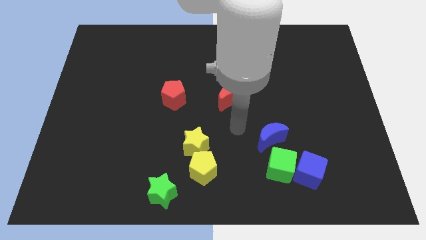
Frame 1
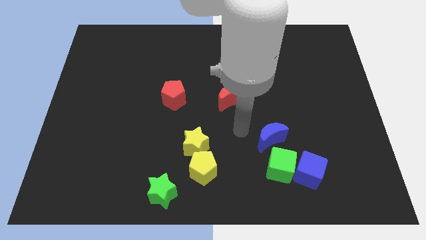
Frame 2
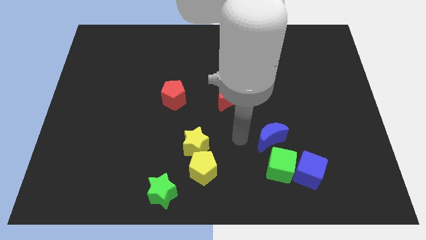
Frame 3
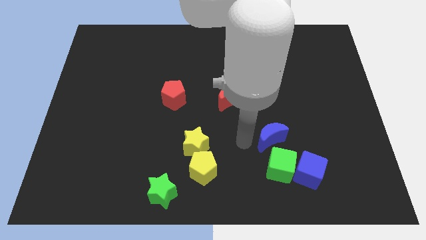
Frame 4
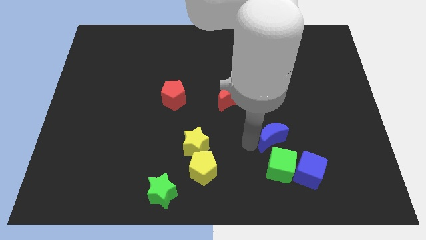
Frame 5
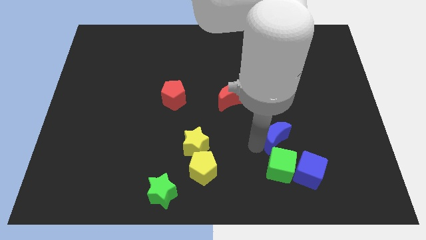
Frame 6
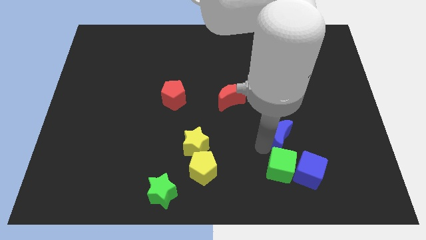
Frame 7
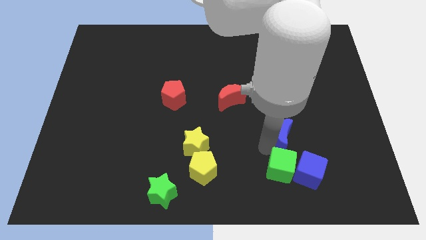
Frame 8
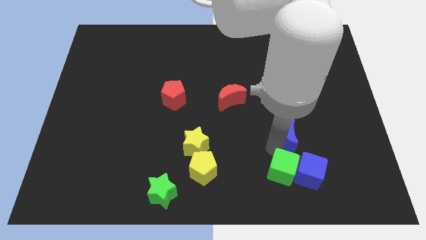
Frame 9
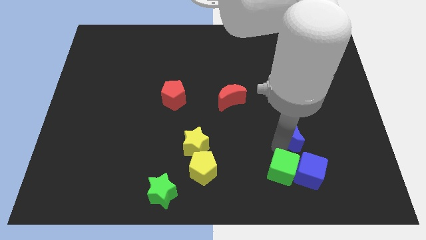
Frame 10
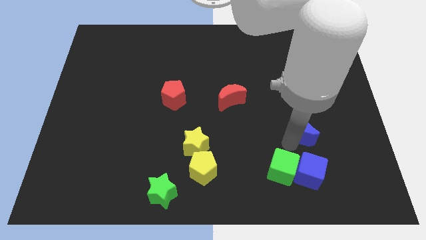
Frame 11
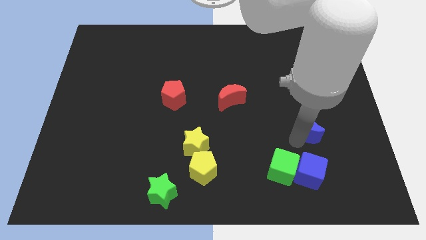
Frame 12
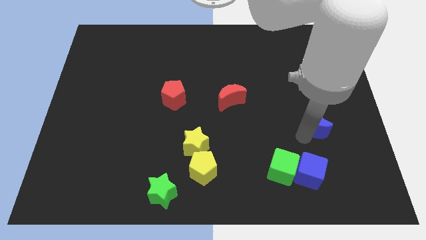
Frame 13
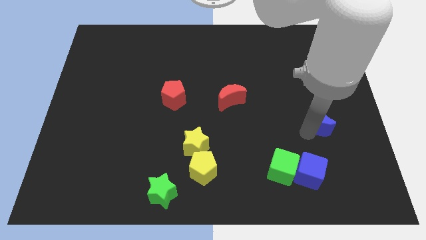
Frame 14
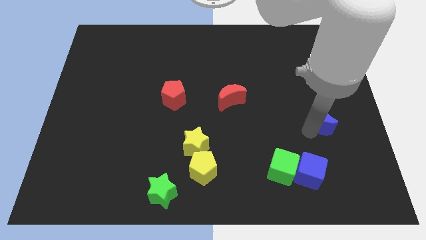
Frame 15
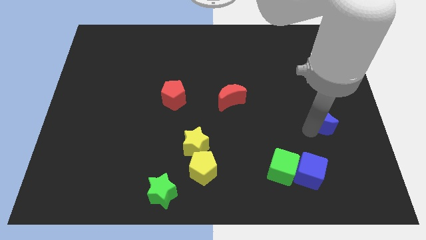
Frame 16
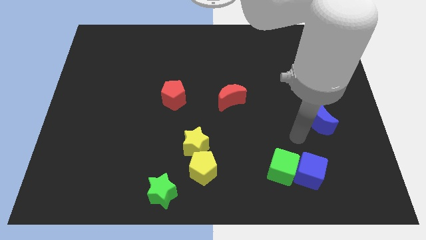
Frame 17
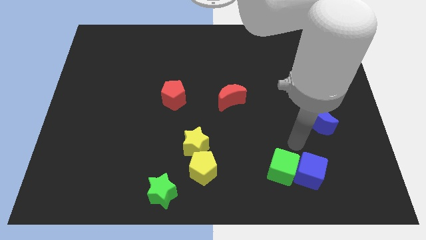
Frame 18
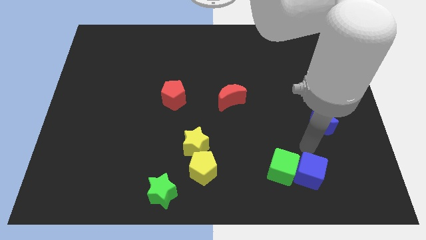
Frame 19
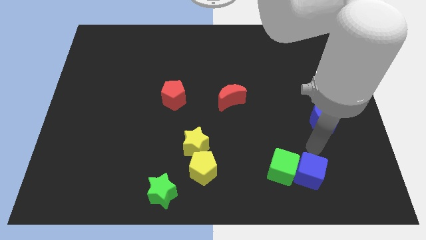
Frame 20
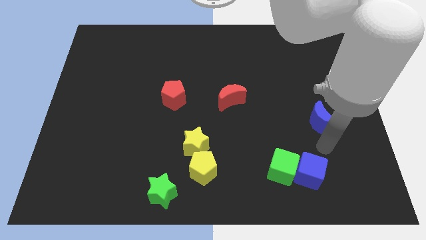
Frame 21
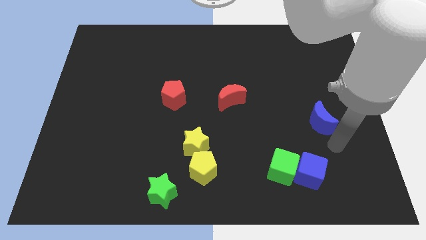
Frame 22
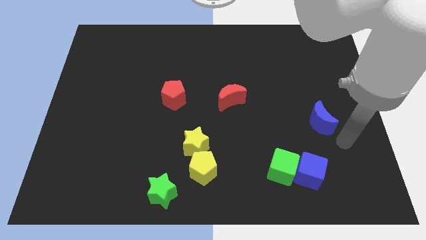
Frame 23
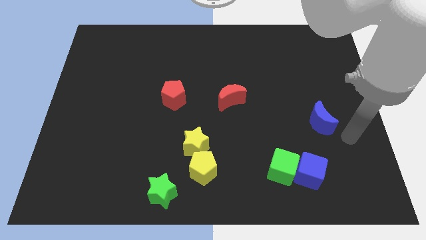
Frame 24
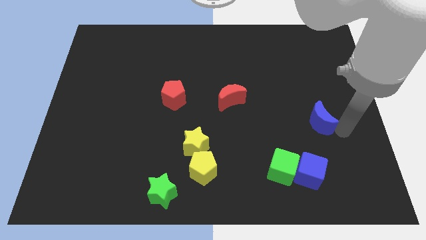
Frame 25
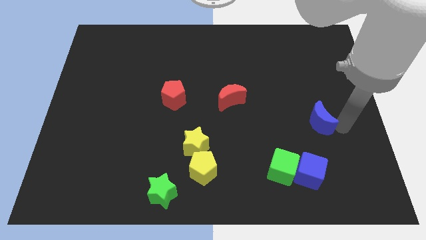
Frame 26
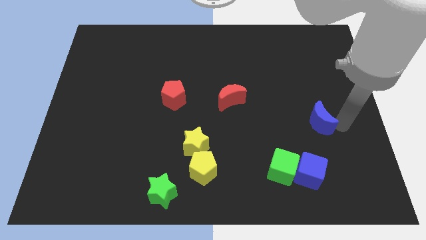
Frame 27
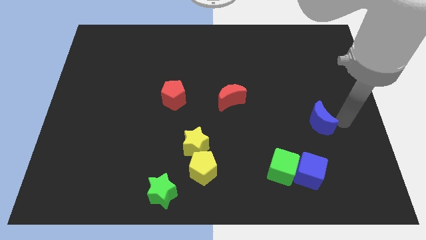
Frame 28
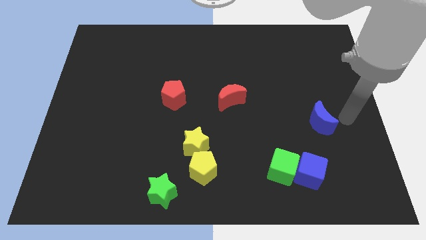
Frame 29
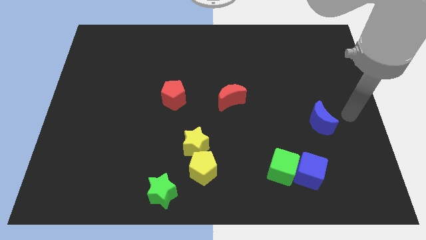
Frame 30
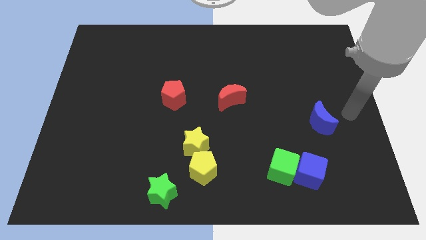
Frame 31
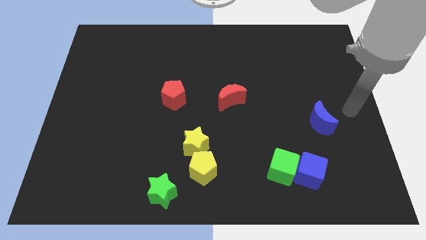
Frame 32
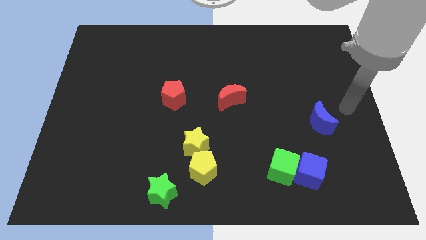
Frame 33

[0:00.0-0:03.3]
move the blue moon diagonally top right to the blue cube

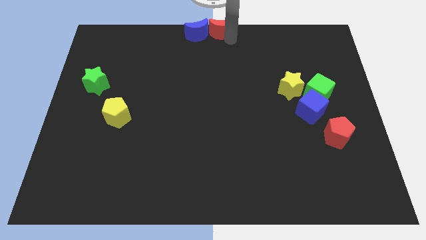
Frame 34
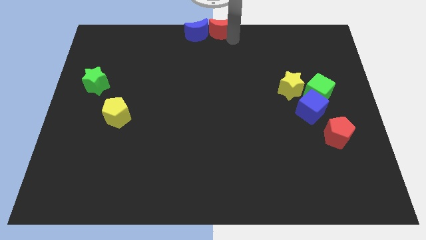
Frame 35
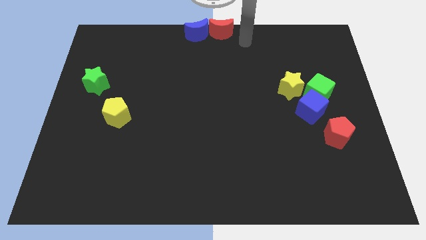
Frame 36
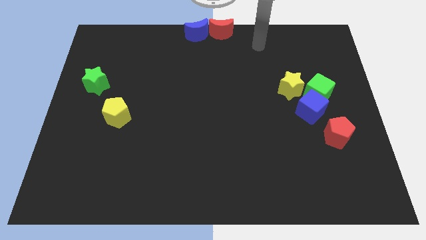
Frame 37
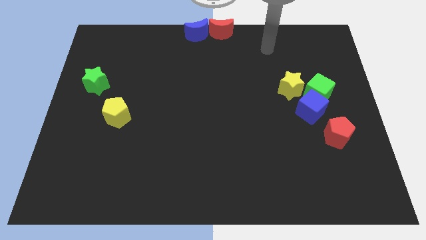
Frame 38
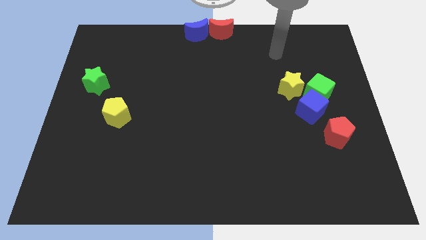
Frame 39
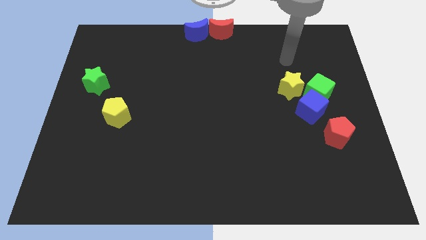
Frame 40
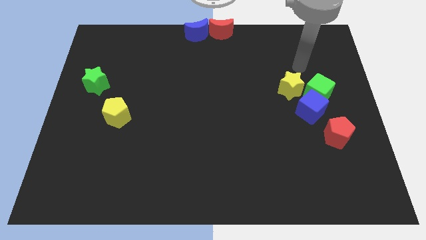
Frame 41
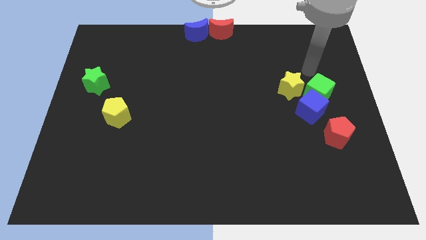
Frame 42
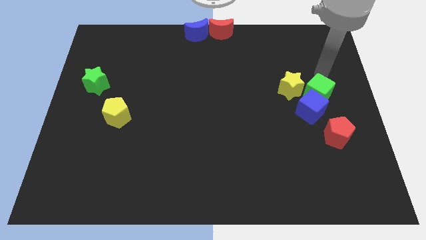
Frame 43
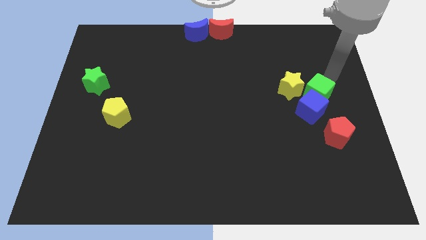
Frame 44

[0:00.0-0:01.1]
move the arm away from the red moon

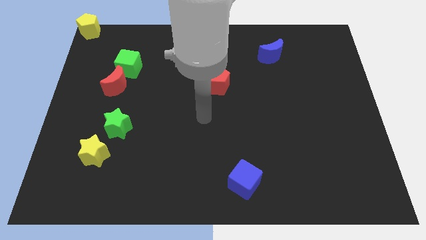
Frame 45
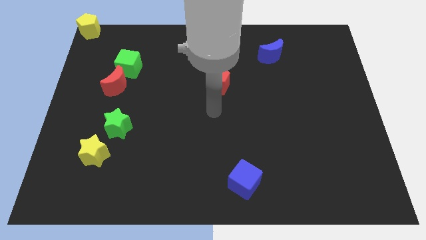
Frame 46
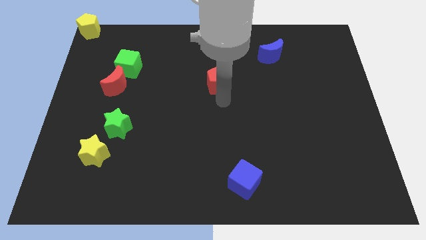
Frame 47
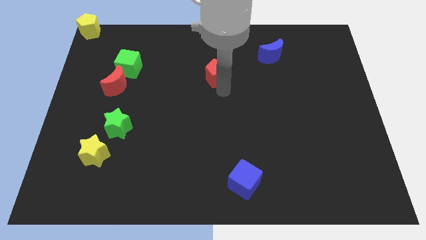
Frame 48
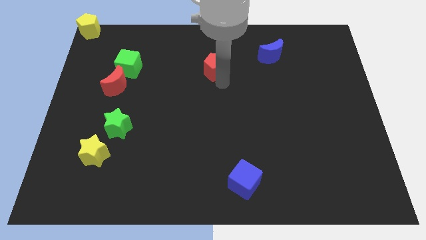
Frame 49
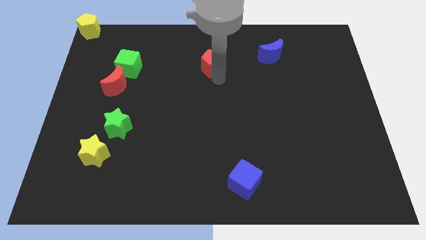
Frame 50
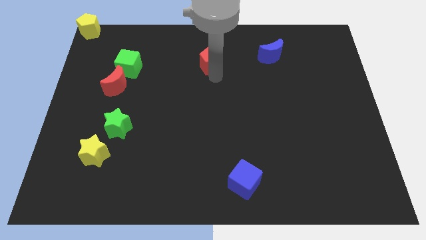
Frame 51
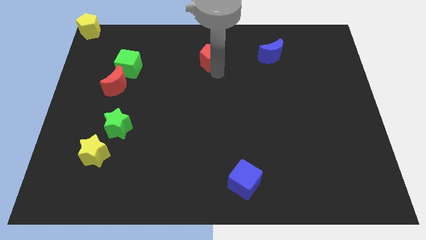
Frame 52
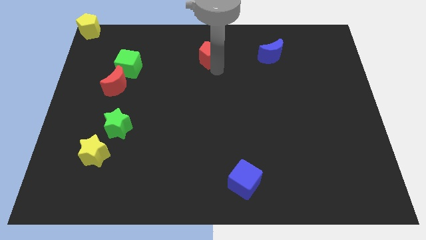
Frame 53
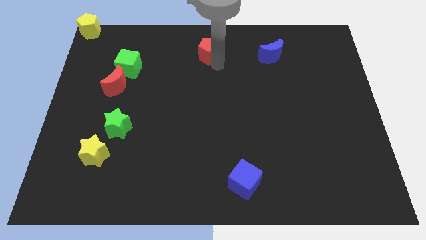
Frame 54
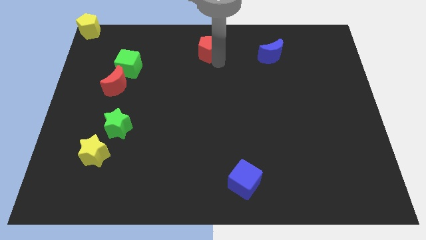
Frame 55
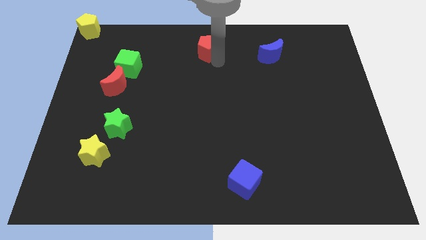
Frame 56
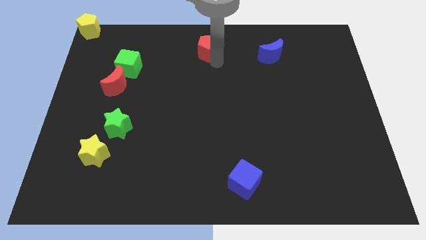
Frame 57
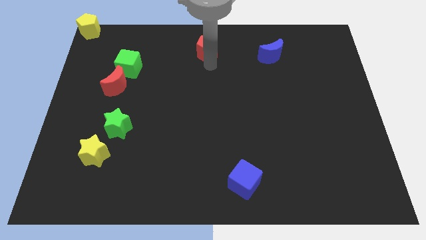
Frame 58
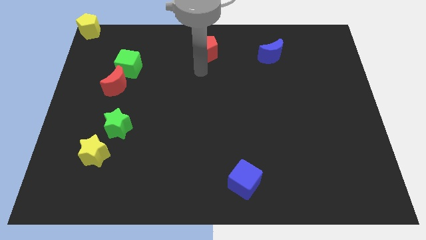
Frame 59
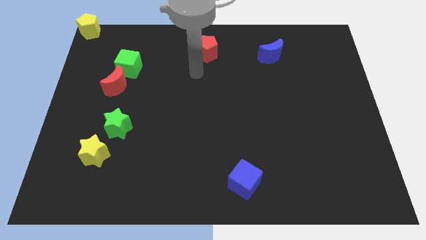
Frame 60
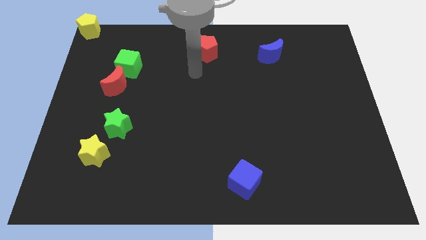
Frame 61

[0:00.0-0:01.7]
put the red pentagon to the left of the blue crescent

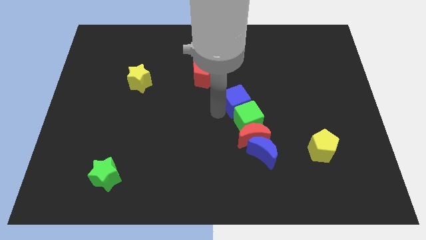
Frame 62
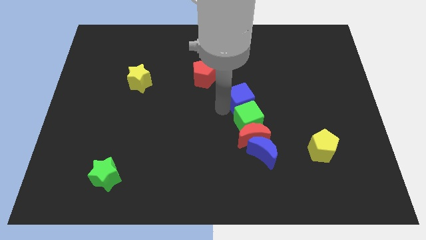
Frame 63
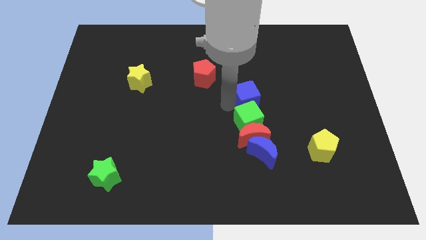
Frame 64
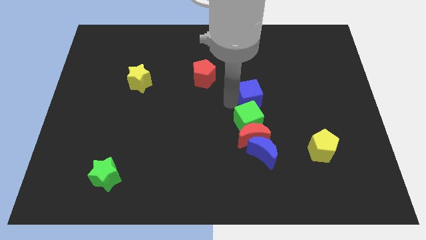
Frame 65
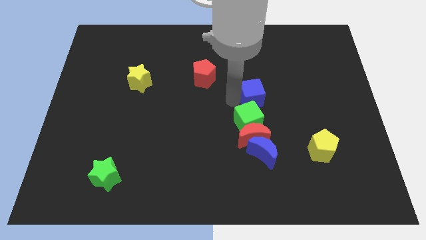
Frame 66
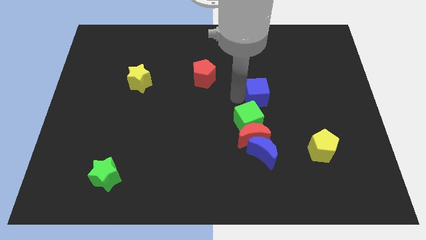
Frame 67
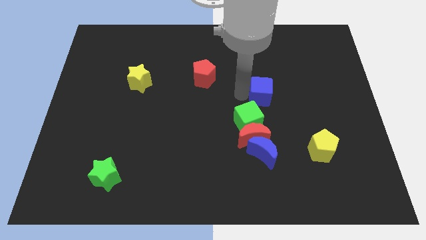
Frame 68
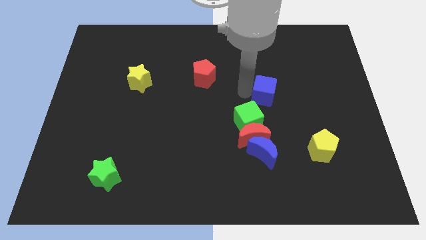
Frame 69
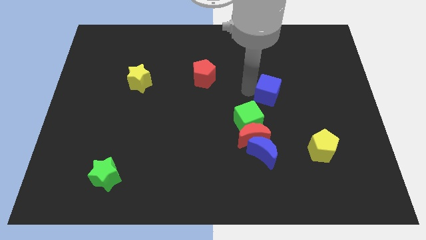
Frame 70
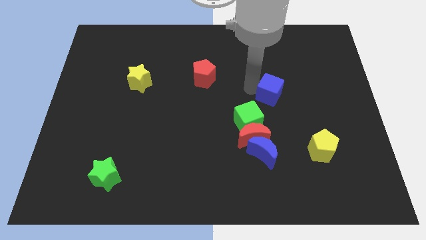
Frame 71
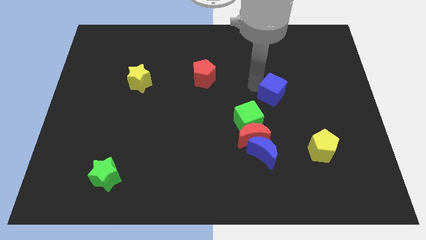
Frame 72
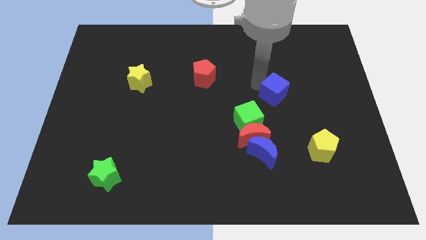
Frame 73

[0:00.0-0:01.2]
push blue cube slightly right side

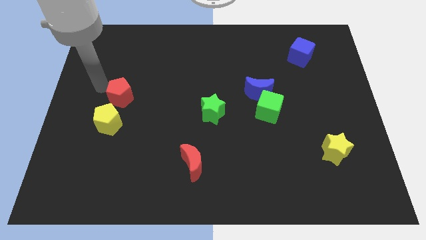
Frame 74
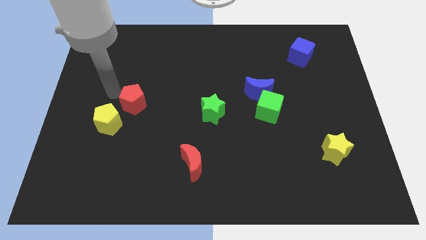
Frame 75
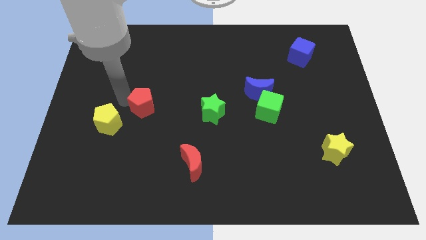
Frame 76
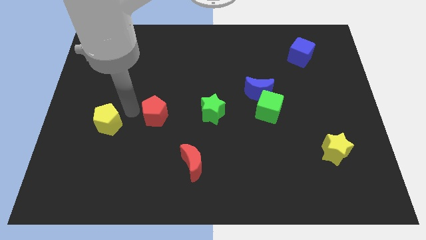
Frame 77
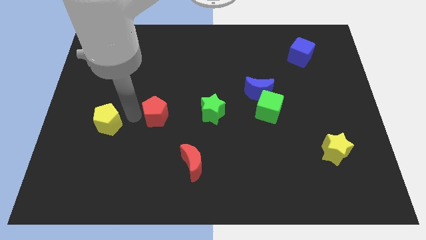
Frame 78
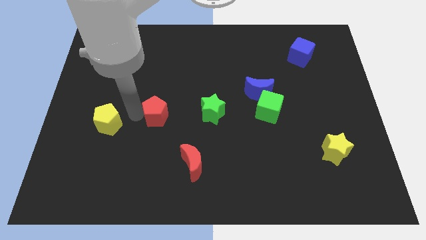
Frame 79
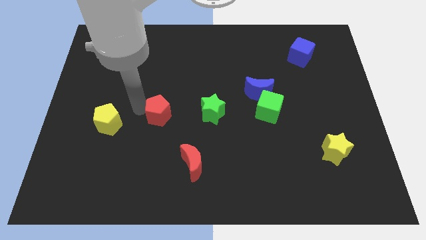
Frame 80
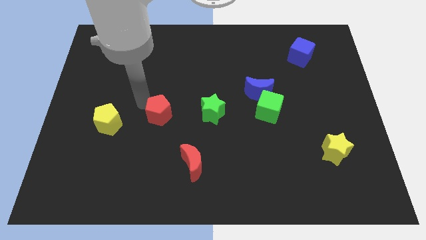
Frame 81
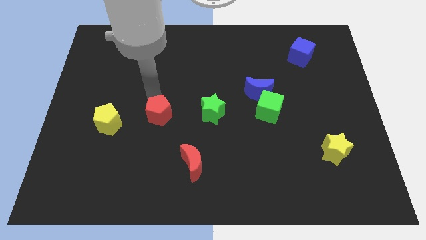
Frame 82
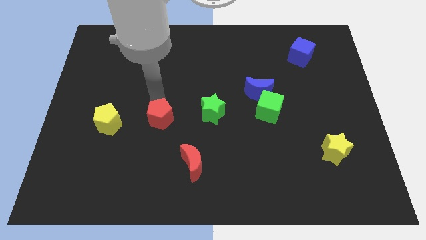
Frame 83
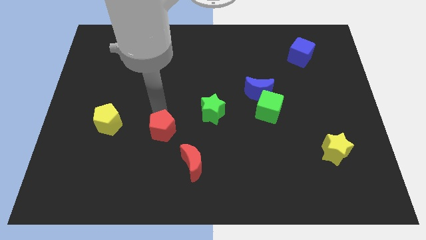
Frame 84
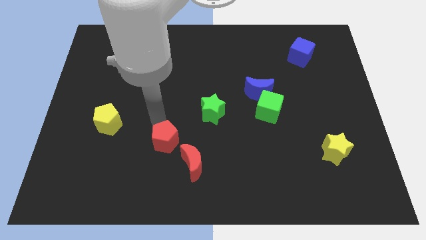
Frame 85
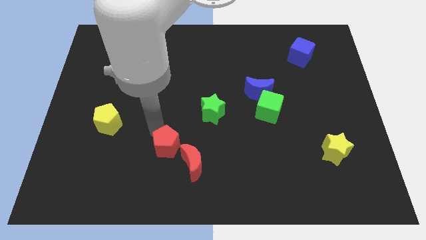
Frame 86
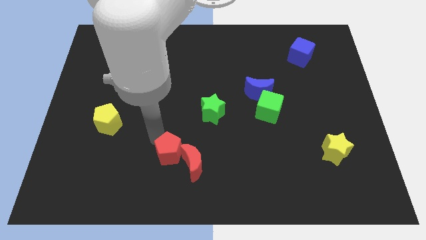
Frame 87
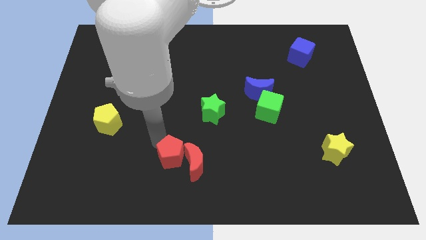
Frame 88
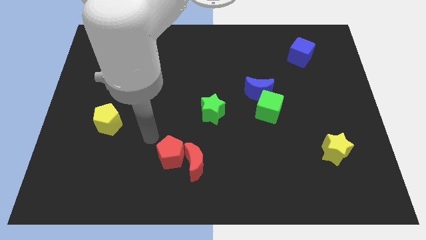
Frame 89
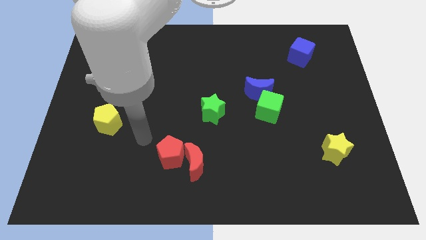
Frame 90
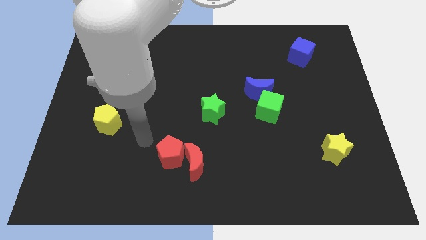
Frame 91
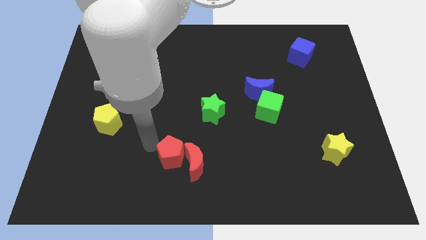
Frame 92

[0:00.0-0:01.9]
push the red pentagon to the red moon
